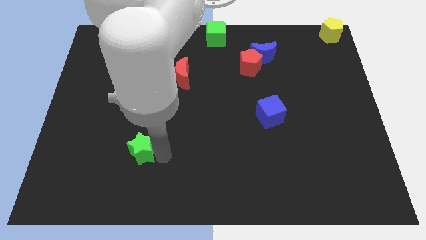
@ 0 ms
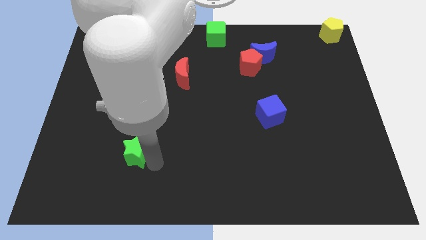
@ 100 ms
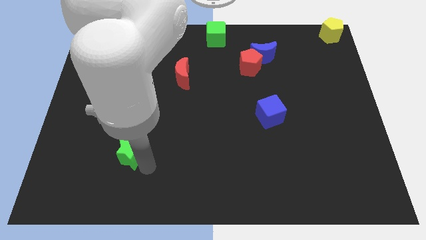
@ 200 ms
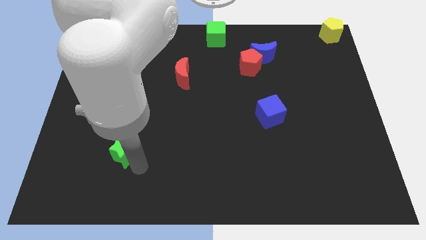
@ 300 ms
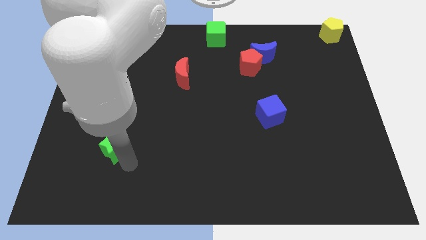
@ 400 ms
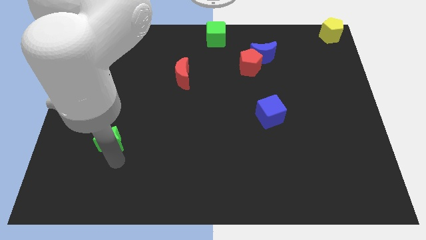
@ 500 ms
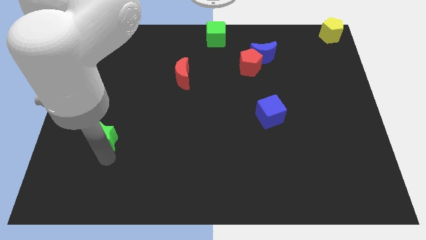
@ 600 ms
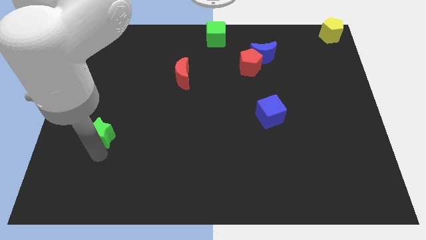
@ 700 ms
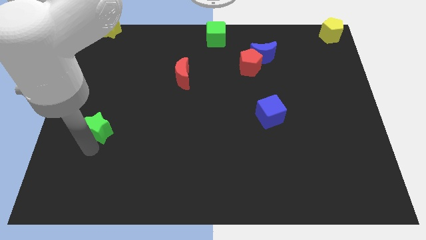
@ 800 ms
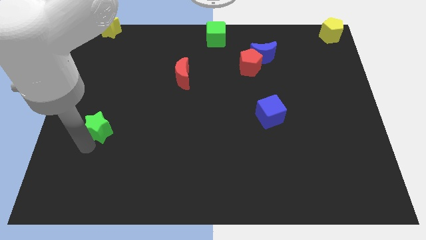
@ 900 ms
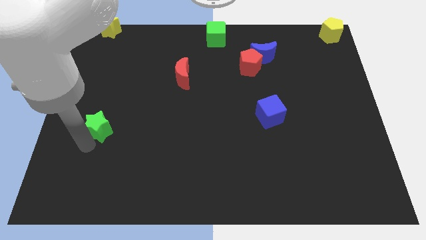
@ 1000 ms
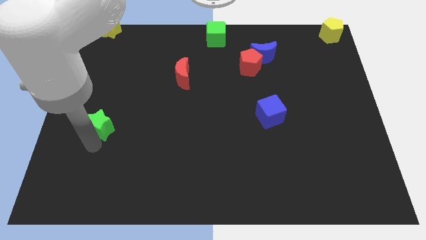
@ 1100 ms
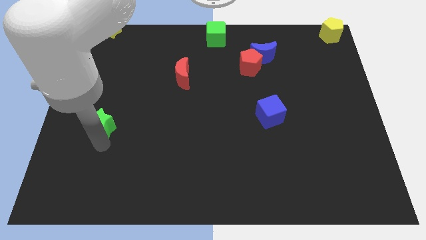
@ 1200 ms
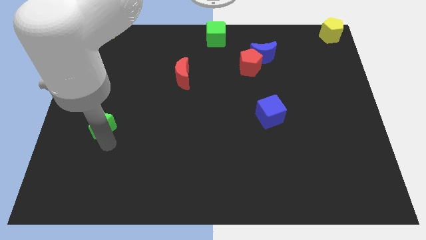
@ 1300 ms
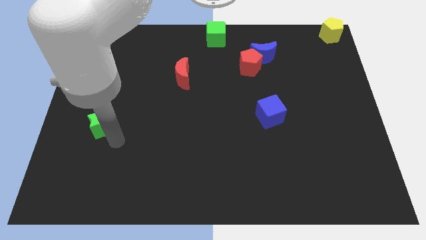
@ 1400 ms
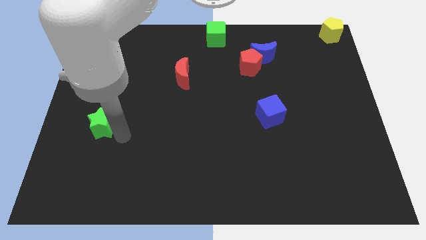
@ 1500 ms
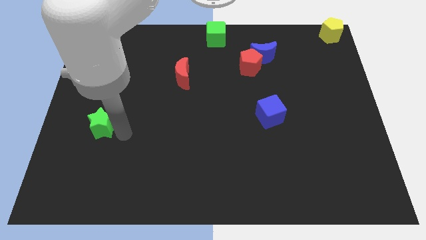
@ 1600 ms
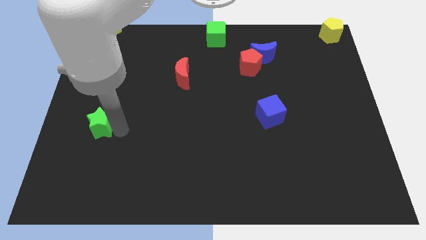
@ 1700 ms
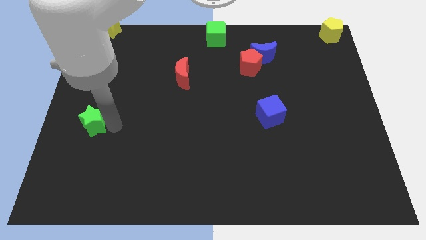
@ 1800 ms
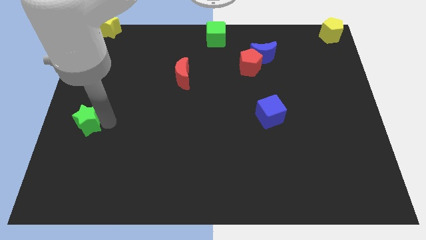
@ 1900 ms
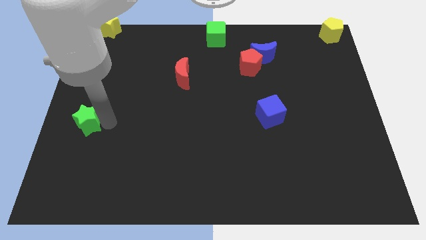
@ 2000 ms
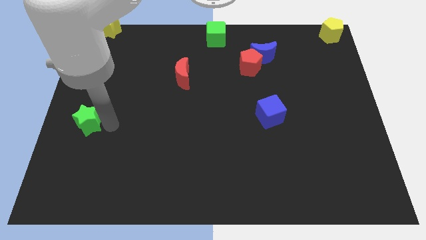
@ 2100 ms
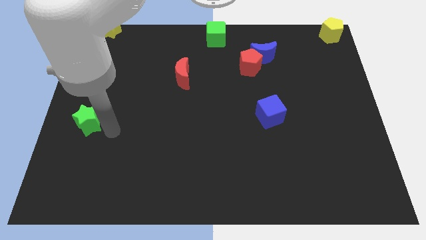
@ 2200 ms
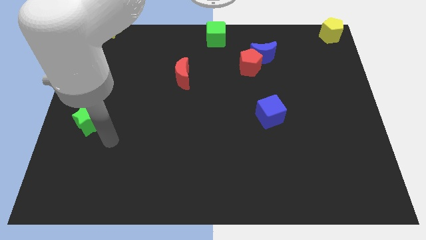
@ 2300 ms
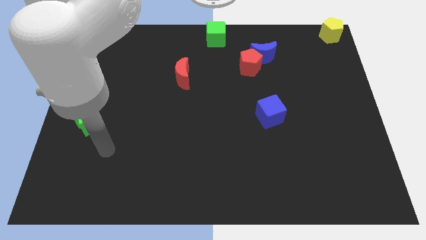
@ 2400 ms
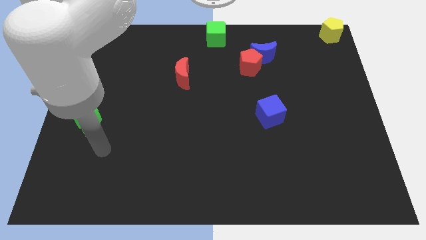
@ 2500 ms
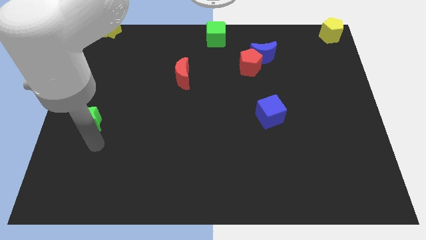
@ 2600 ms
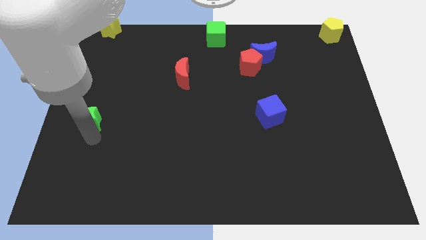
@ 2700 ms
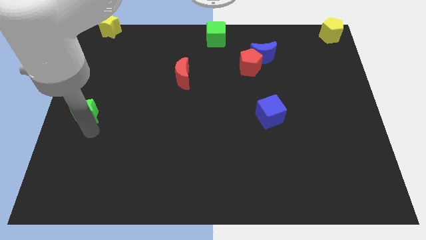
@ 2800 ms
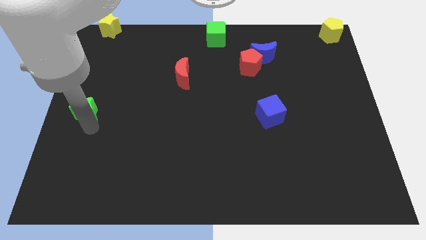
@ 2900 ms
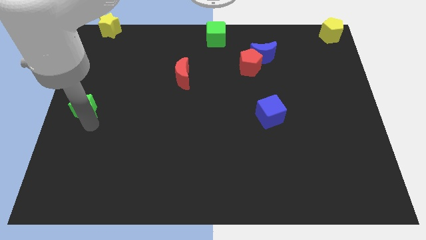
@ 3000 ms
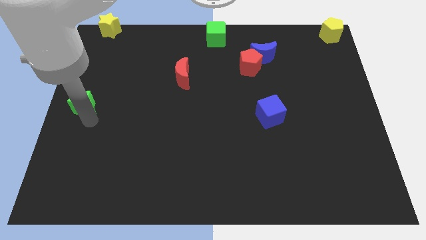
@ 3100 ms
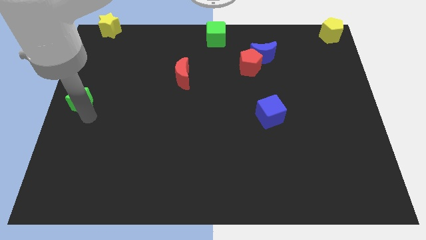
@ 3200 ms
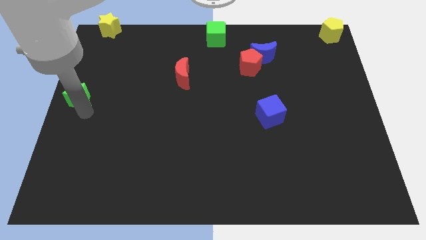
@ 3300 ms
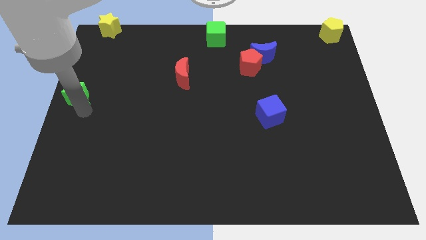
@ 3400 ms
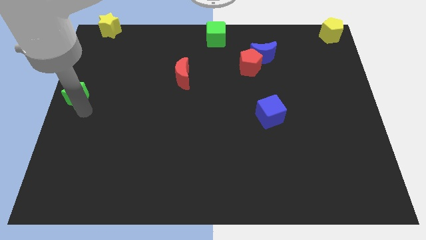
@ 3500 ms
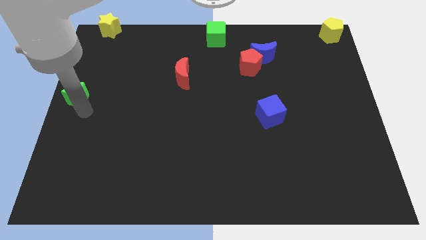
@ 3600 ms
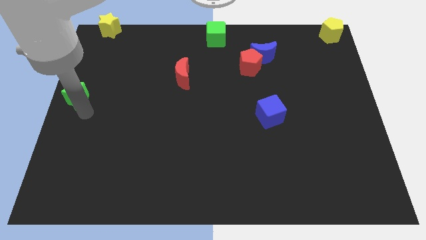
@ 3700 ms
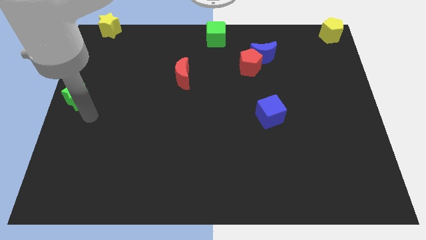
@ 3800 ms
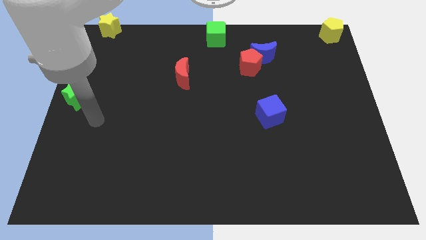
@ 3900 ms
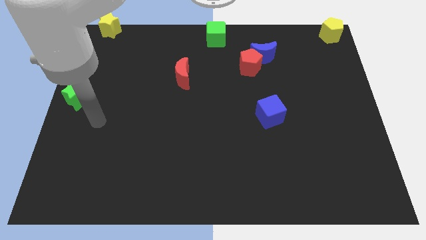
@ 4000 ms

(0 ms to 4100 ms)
place the green star at the center left of the board

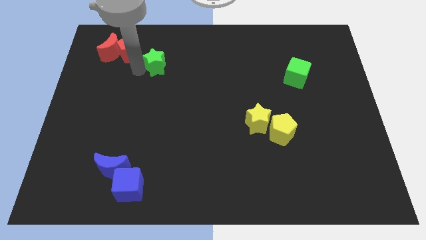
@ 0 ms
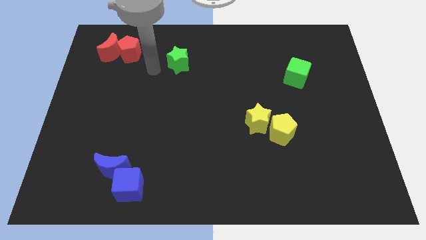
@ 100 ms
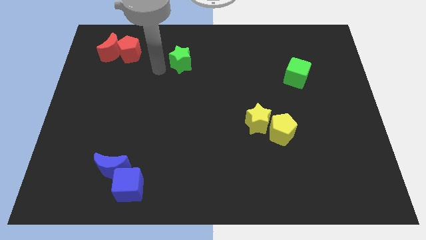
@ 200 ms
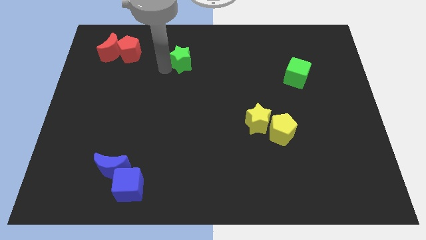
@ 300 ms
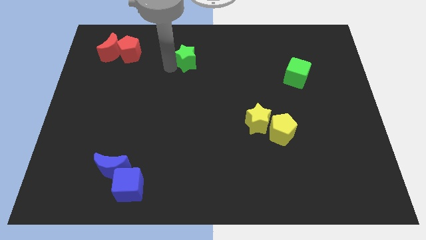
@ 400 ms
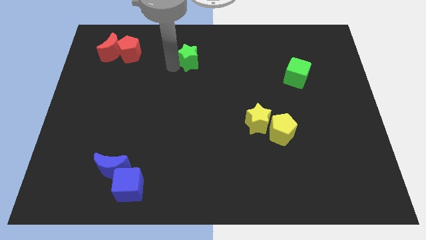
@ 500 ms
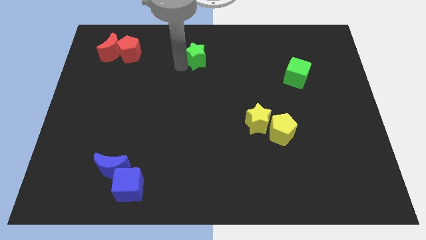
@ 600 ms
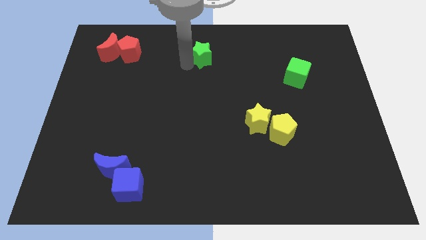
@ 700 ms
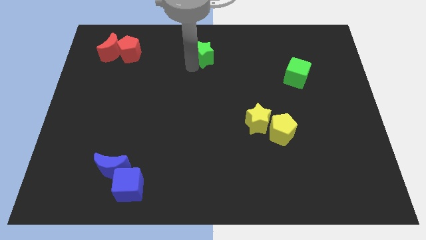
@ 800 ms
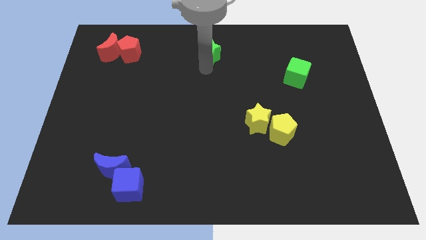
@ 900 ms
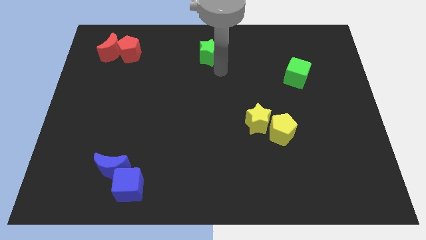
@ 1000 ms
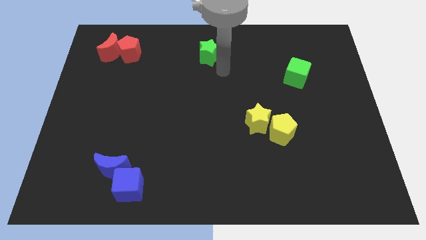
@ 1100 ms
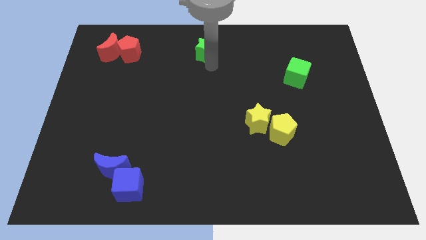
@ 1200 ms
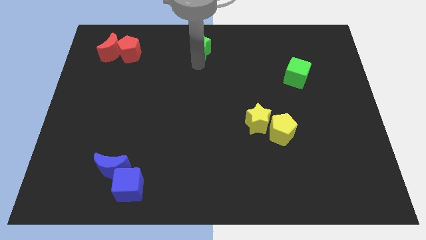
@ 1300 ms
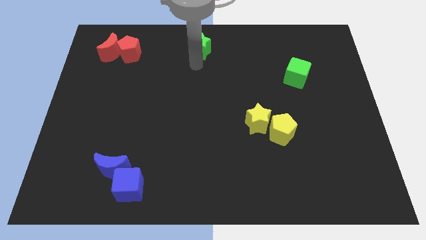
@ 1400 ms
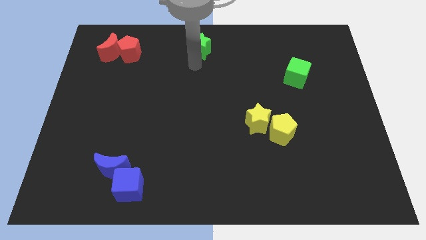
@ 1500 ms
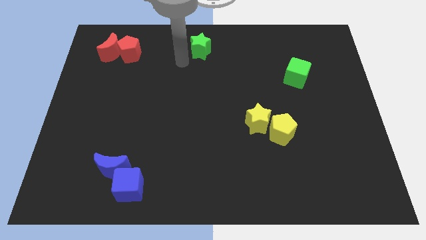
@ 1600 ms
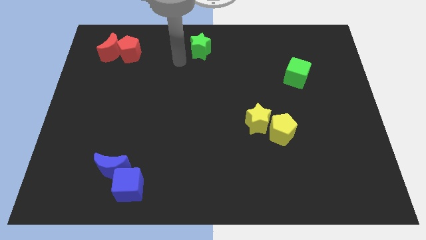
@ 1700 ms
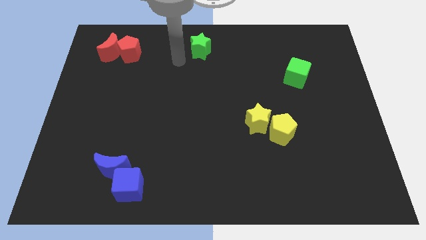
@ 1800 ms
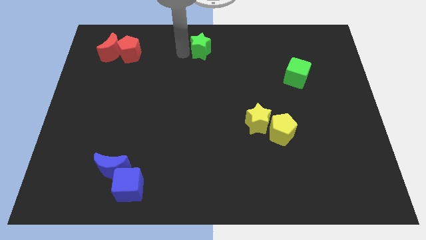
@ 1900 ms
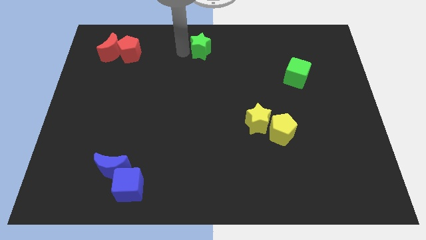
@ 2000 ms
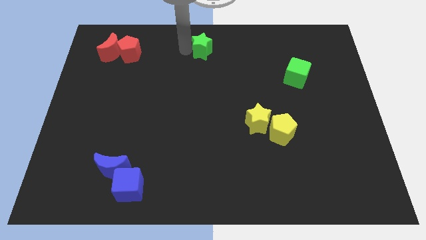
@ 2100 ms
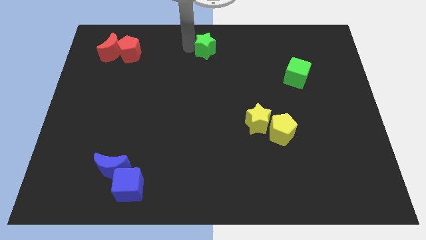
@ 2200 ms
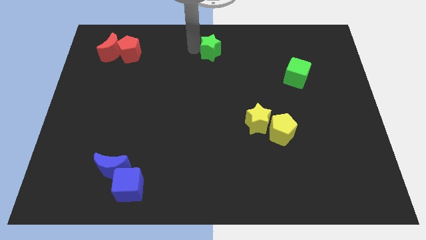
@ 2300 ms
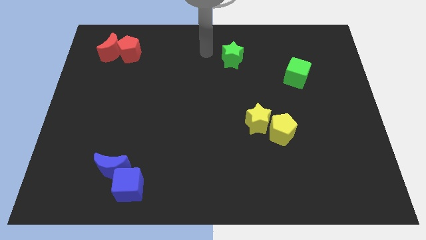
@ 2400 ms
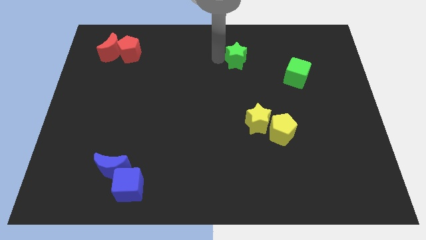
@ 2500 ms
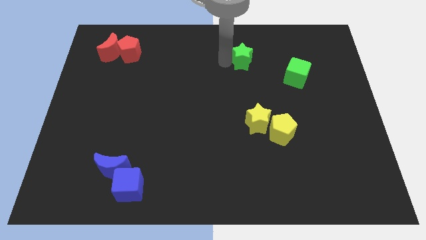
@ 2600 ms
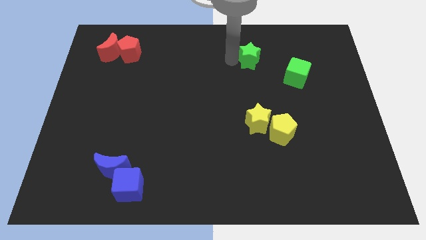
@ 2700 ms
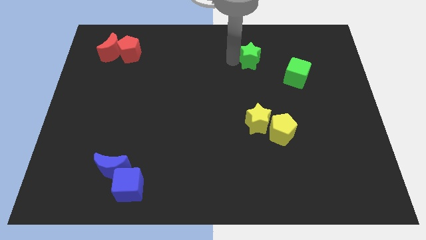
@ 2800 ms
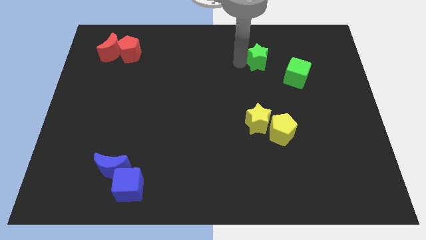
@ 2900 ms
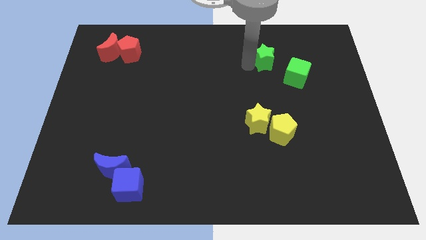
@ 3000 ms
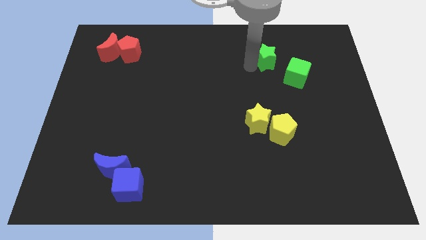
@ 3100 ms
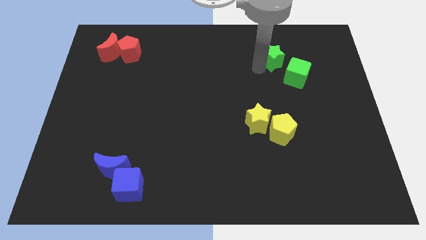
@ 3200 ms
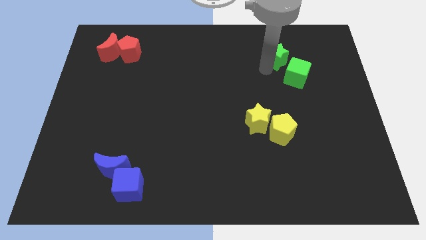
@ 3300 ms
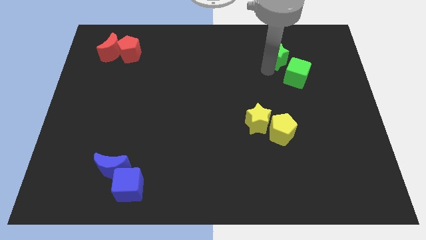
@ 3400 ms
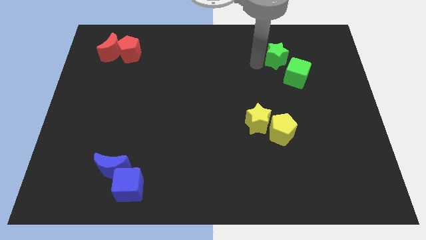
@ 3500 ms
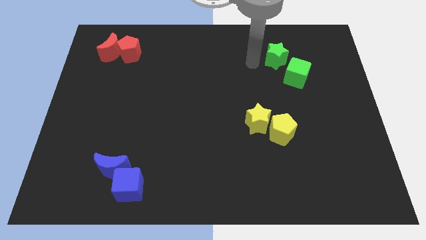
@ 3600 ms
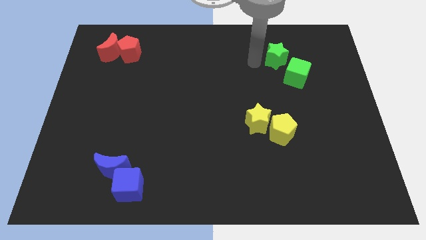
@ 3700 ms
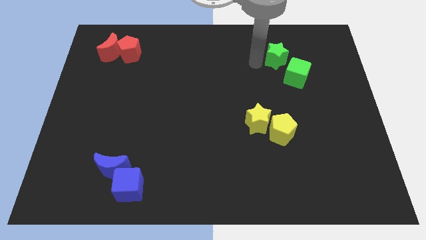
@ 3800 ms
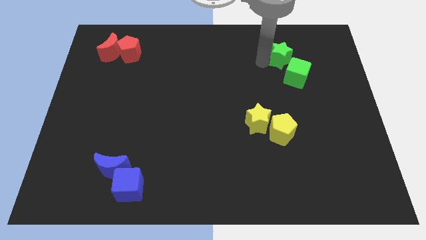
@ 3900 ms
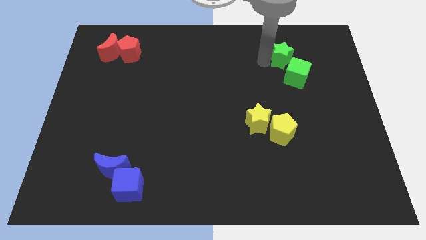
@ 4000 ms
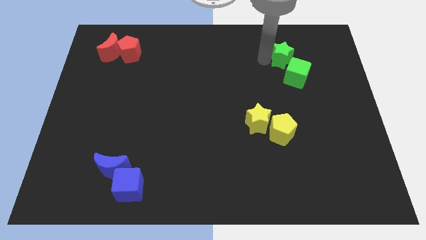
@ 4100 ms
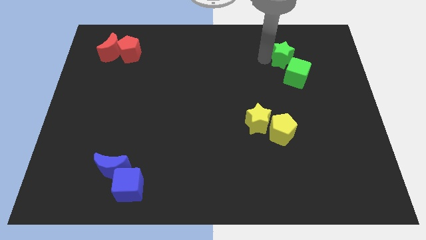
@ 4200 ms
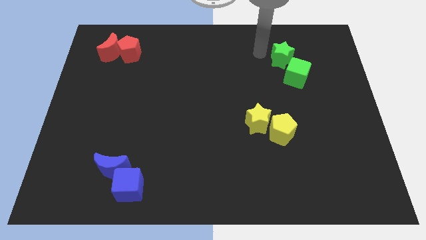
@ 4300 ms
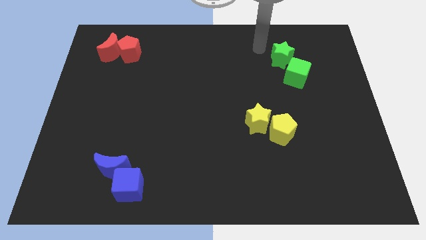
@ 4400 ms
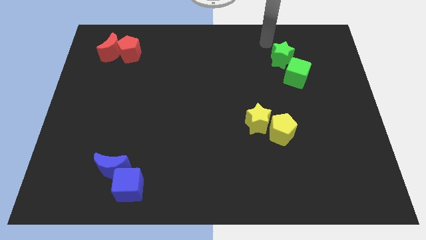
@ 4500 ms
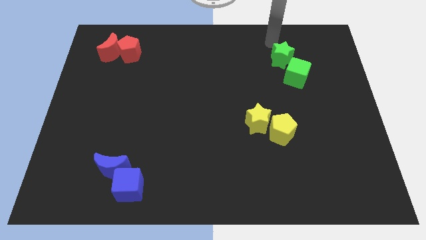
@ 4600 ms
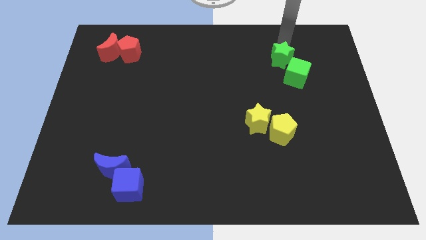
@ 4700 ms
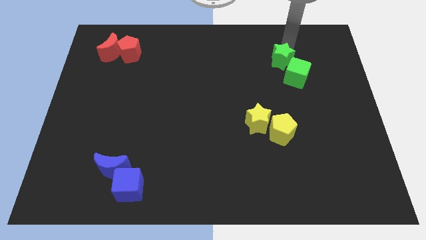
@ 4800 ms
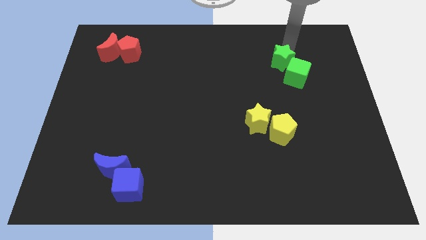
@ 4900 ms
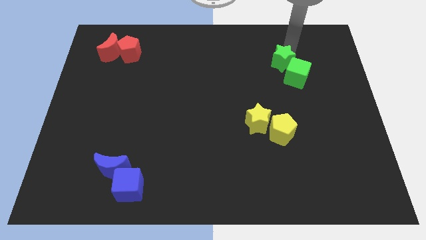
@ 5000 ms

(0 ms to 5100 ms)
move green star left above the green cube
